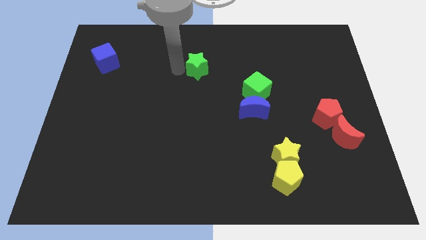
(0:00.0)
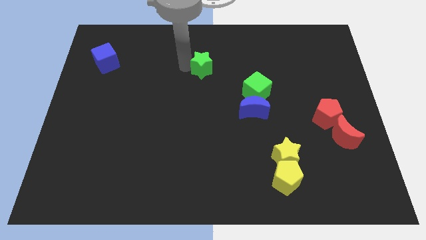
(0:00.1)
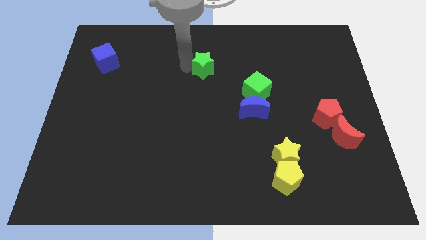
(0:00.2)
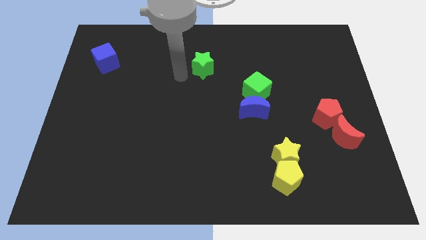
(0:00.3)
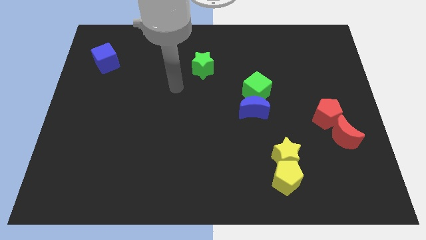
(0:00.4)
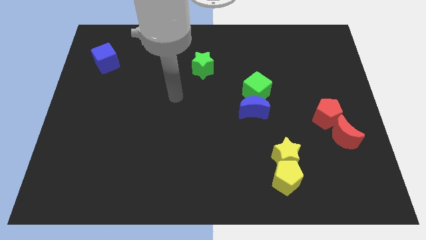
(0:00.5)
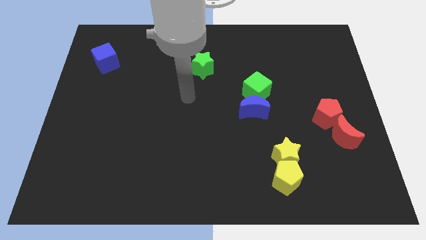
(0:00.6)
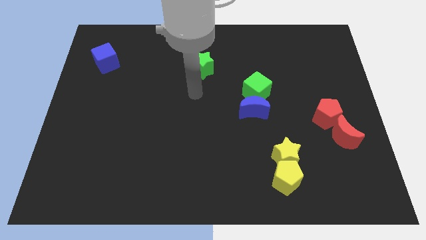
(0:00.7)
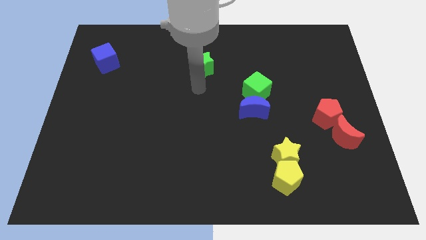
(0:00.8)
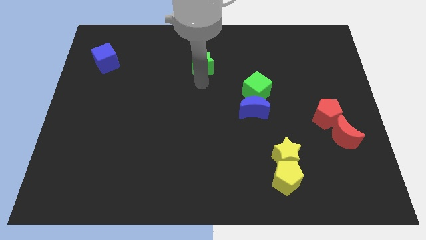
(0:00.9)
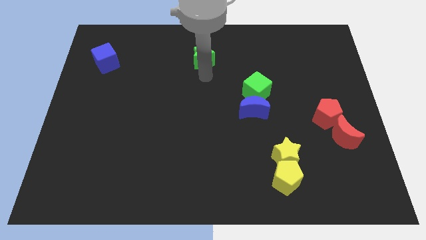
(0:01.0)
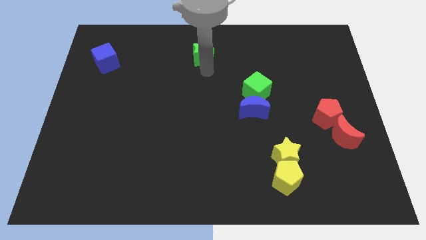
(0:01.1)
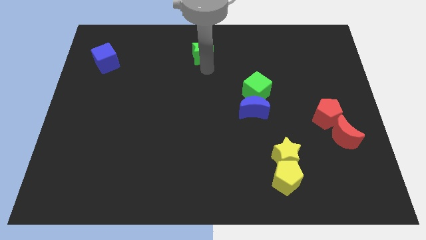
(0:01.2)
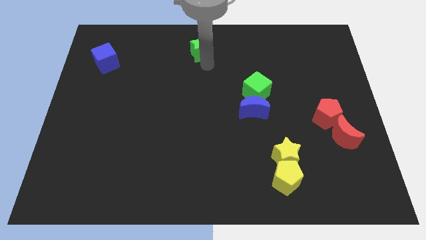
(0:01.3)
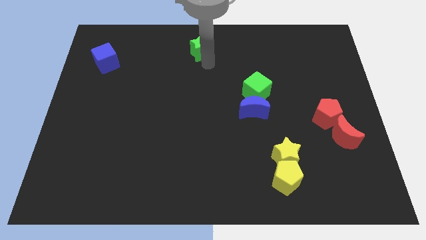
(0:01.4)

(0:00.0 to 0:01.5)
move green star to the top side of the board

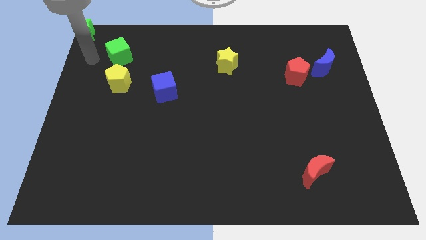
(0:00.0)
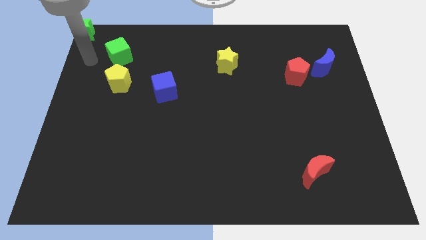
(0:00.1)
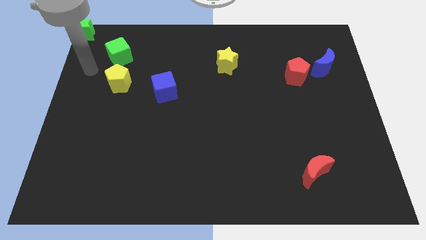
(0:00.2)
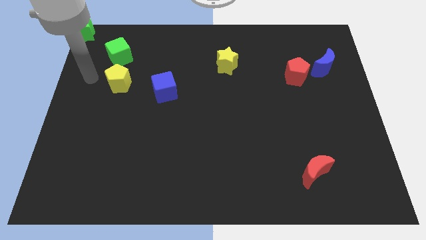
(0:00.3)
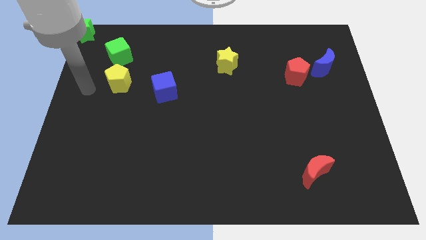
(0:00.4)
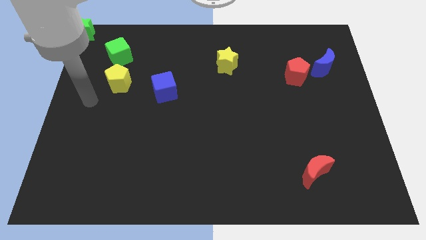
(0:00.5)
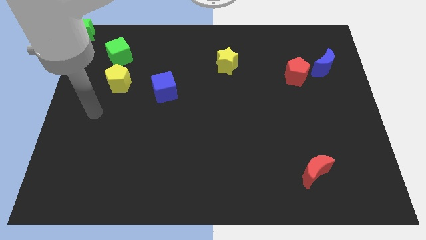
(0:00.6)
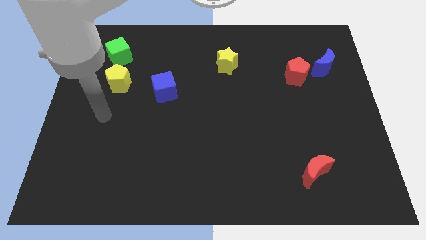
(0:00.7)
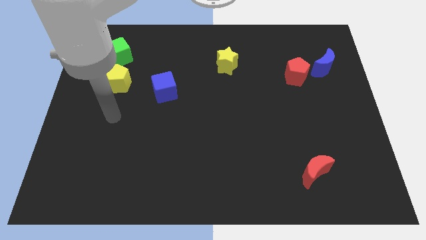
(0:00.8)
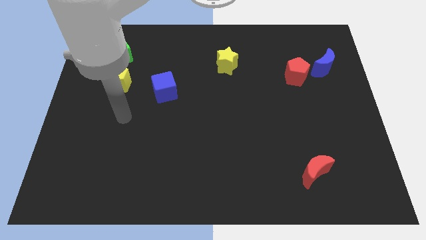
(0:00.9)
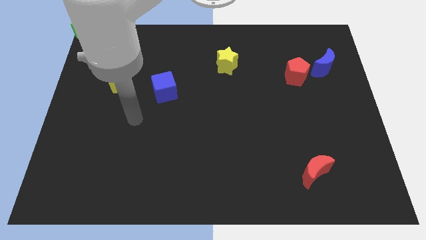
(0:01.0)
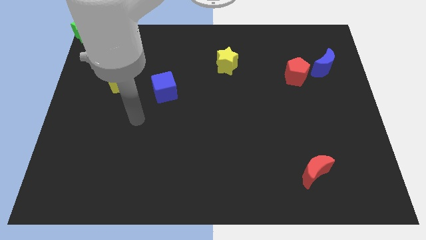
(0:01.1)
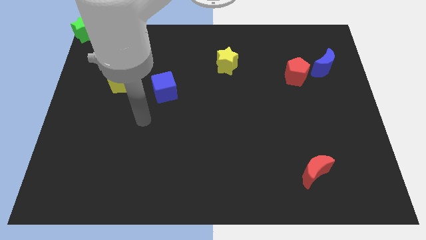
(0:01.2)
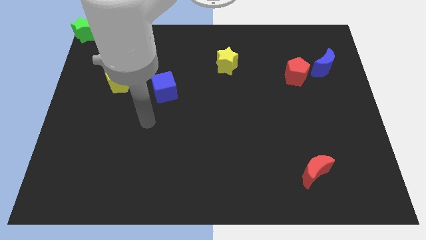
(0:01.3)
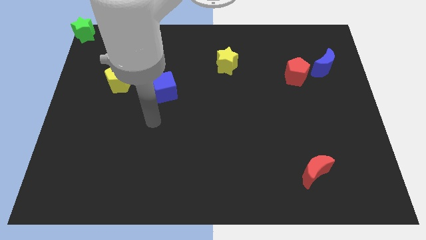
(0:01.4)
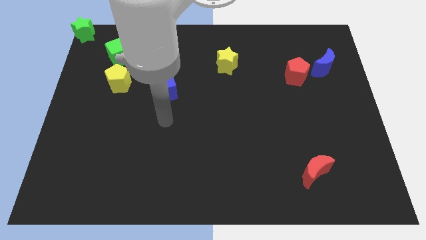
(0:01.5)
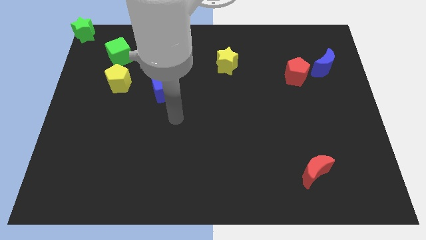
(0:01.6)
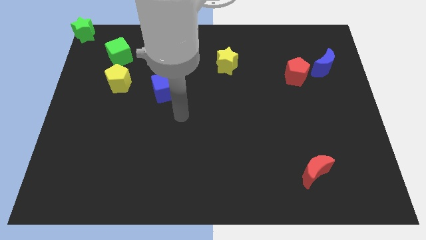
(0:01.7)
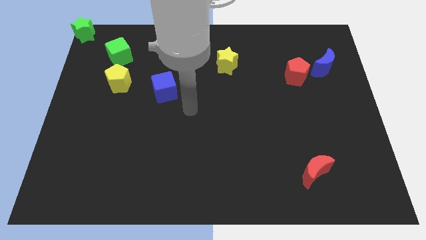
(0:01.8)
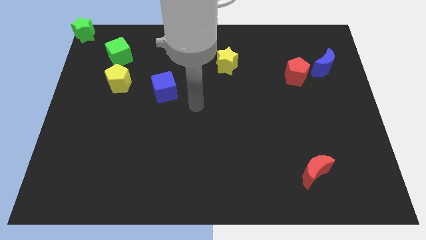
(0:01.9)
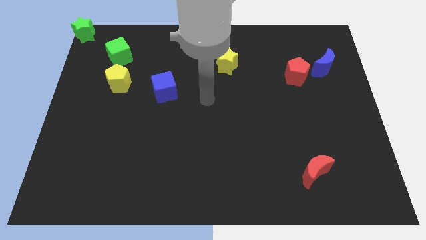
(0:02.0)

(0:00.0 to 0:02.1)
move the arm away from the green star

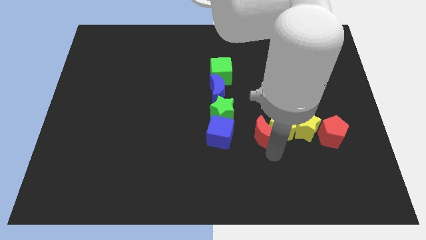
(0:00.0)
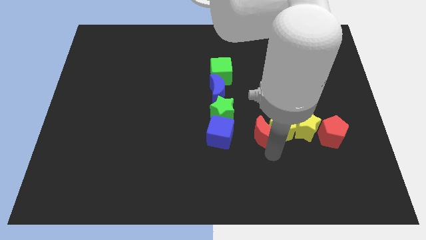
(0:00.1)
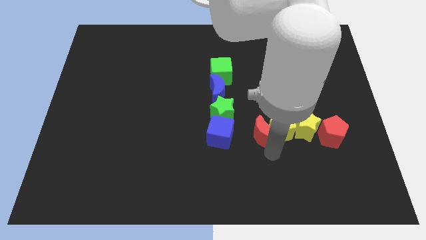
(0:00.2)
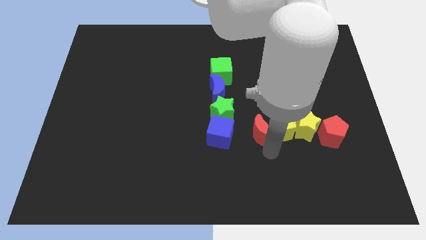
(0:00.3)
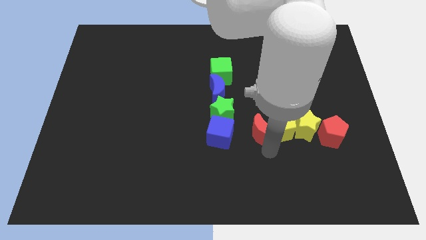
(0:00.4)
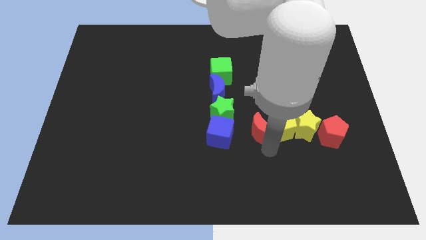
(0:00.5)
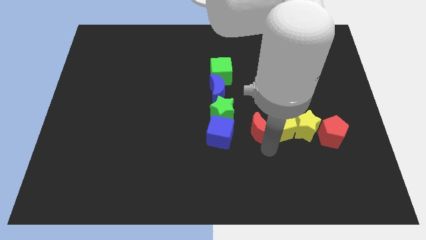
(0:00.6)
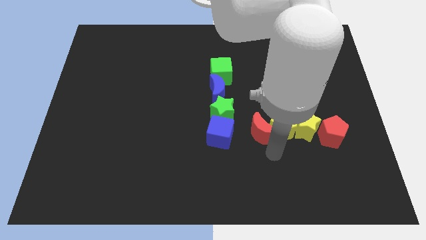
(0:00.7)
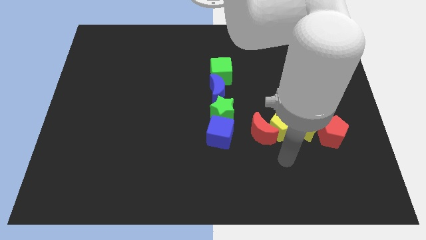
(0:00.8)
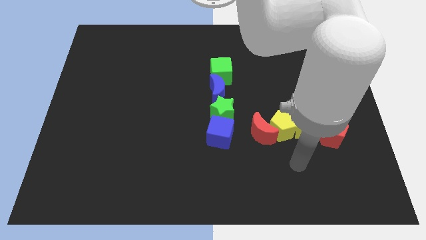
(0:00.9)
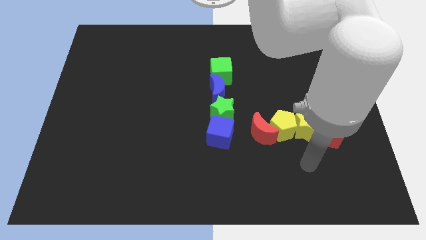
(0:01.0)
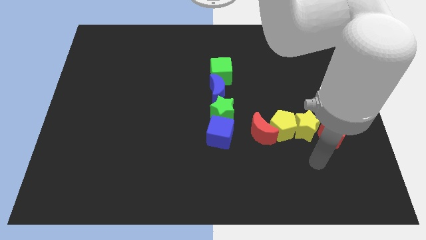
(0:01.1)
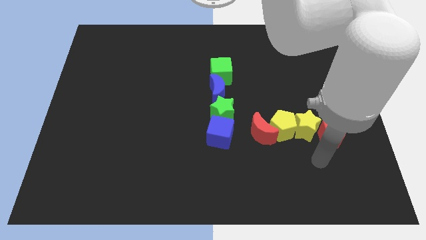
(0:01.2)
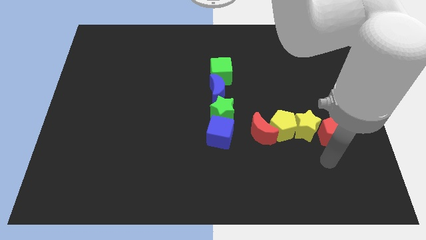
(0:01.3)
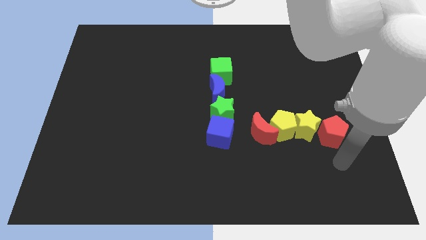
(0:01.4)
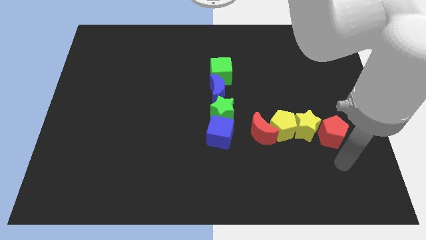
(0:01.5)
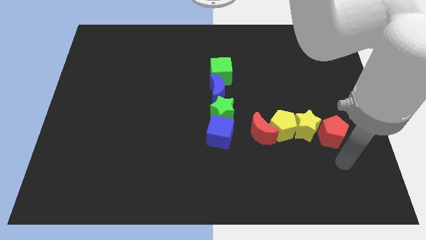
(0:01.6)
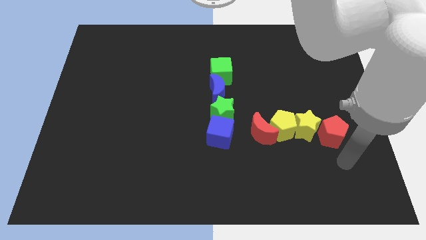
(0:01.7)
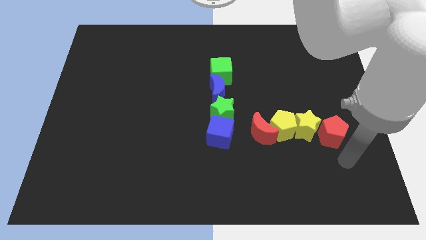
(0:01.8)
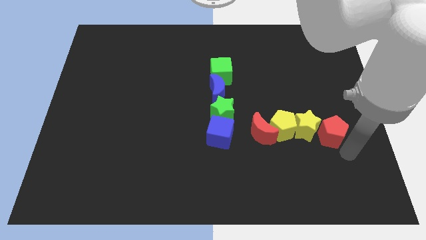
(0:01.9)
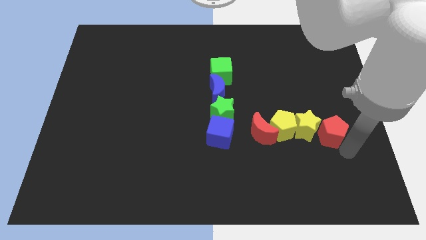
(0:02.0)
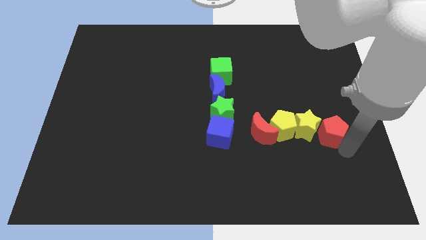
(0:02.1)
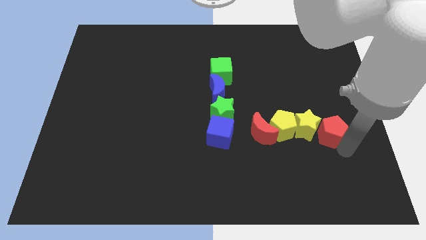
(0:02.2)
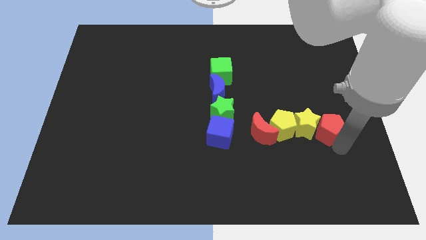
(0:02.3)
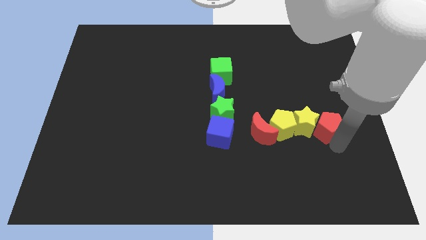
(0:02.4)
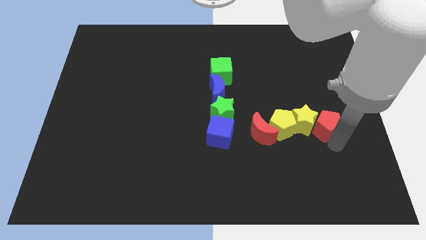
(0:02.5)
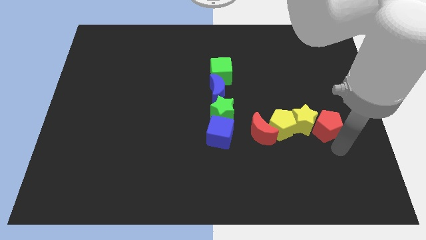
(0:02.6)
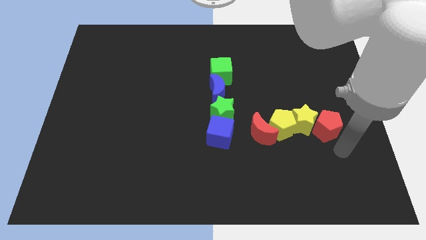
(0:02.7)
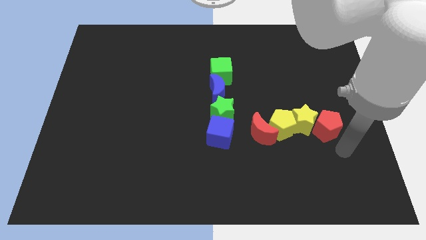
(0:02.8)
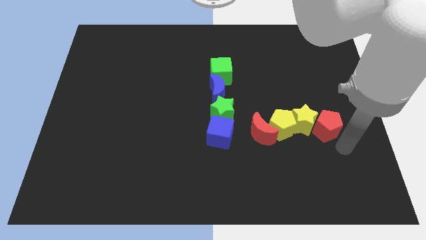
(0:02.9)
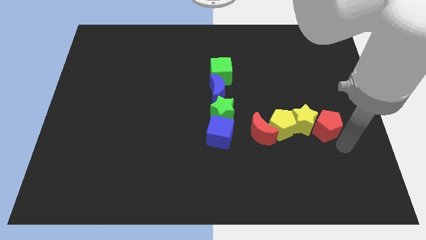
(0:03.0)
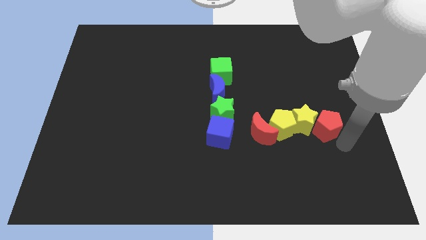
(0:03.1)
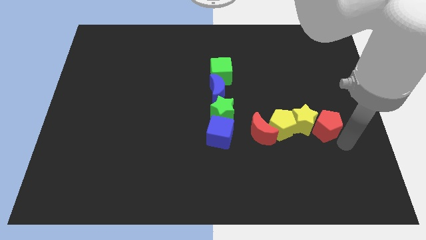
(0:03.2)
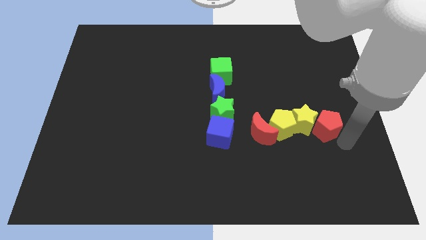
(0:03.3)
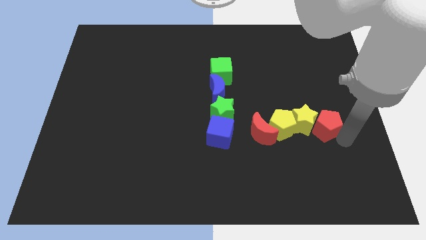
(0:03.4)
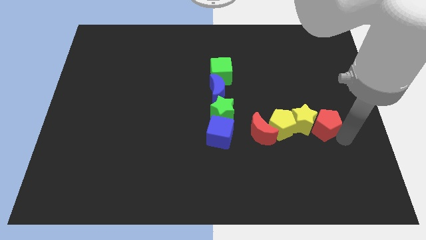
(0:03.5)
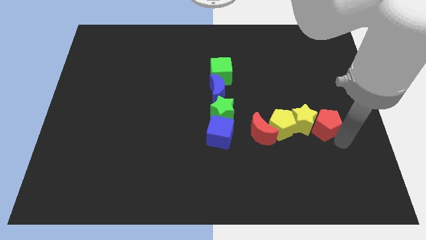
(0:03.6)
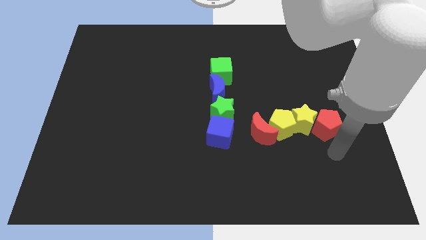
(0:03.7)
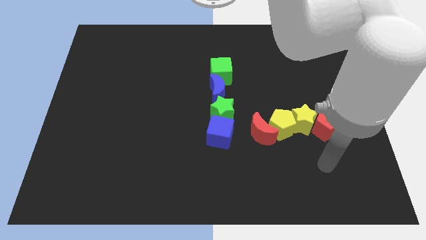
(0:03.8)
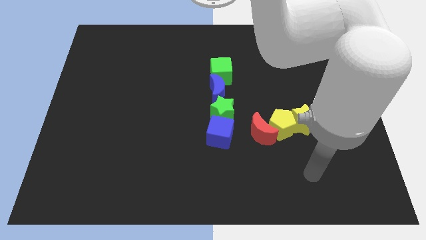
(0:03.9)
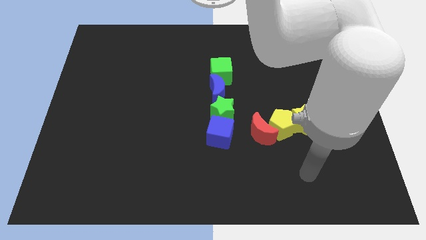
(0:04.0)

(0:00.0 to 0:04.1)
push yellow star with red pentagon

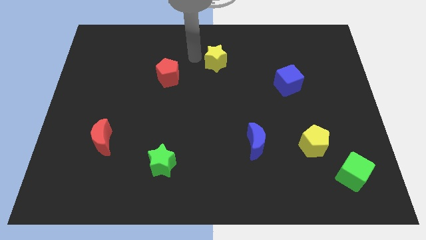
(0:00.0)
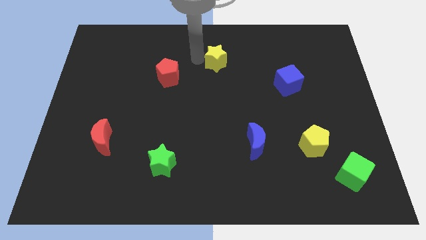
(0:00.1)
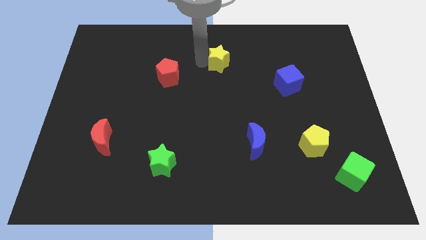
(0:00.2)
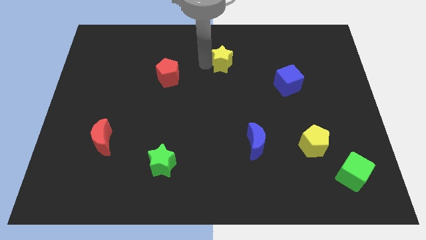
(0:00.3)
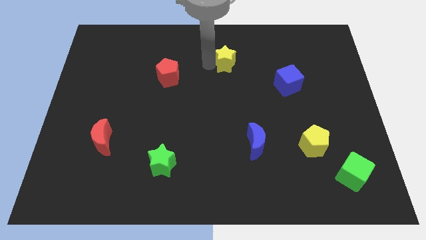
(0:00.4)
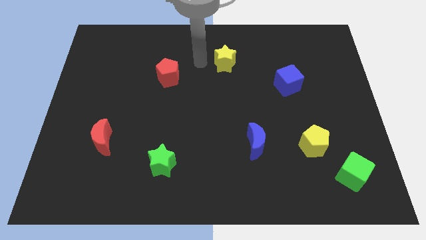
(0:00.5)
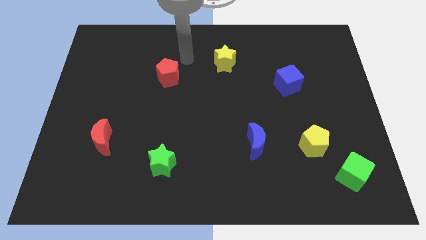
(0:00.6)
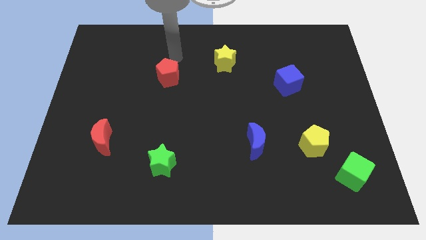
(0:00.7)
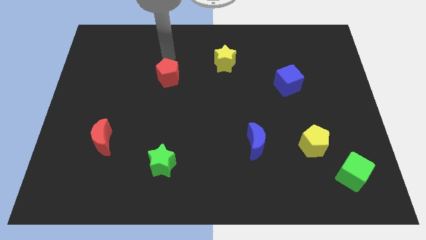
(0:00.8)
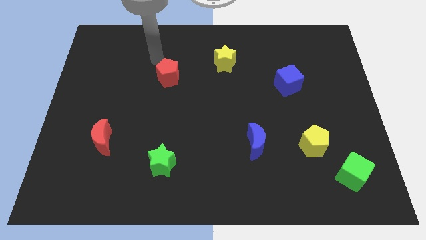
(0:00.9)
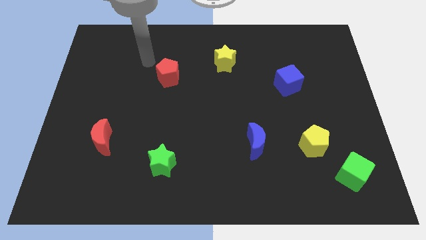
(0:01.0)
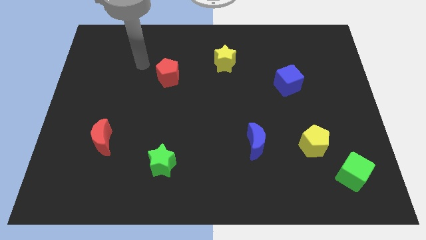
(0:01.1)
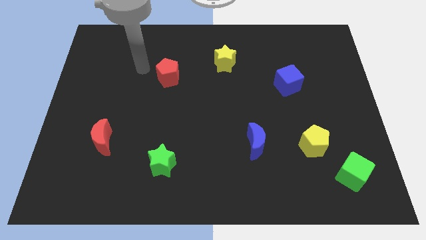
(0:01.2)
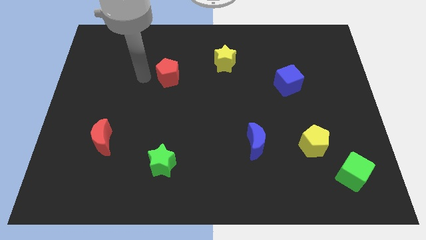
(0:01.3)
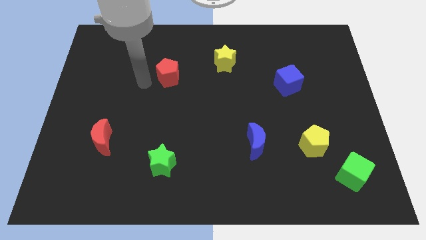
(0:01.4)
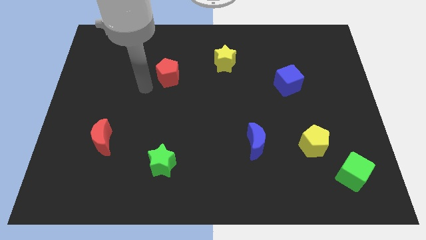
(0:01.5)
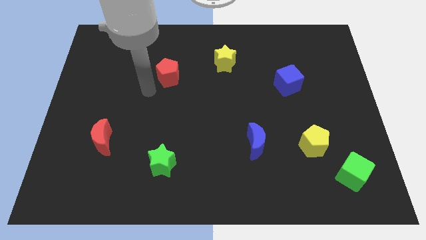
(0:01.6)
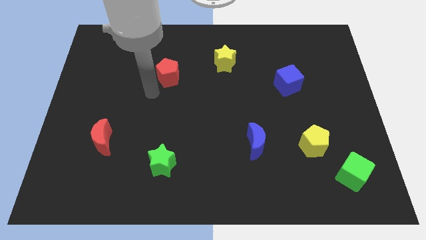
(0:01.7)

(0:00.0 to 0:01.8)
slightly push the yellow star to the right
